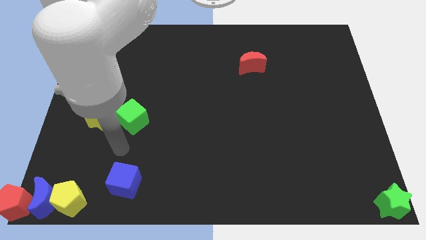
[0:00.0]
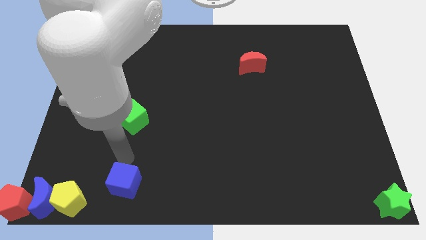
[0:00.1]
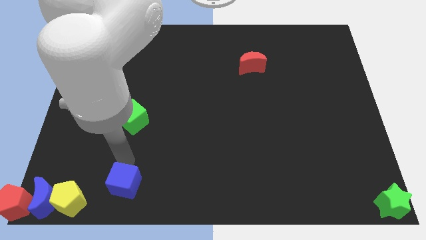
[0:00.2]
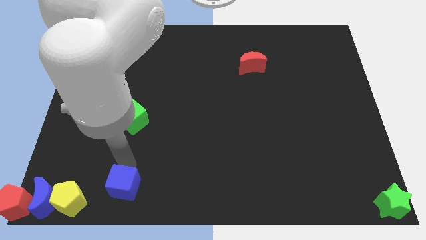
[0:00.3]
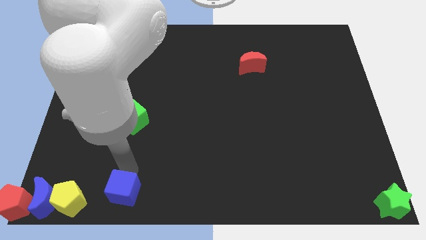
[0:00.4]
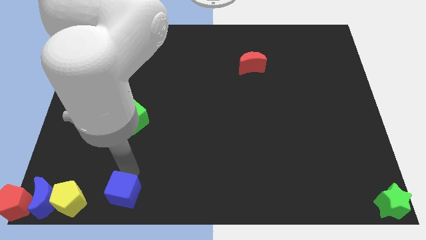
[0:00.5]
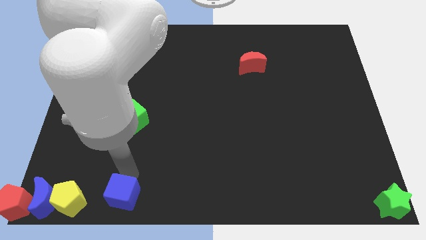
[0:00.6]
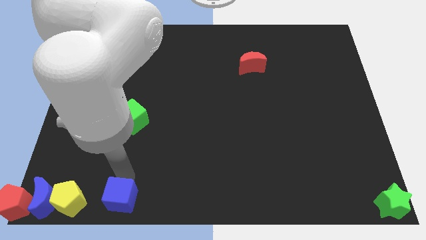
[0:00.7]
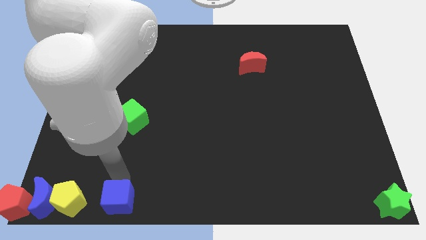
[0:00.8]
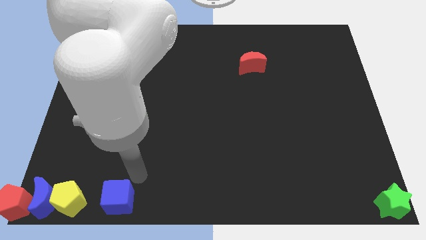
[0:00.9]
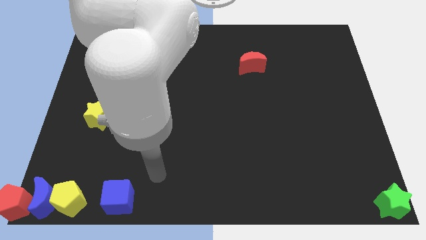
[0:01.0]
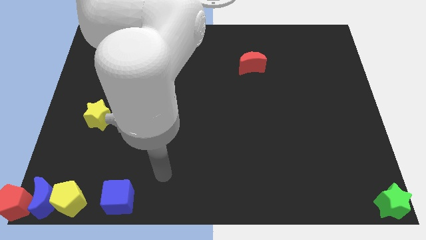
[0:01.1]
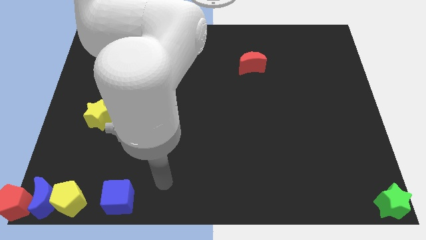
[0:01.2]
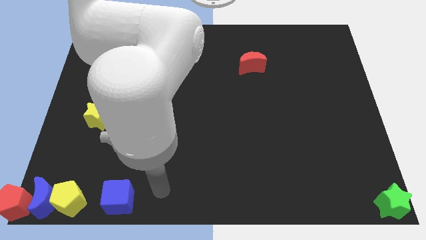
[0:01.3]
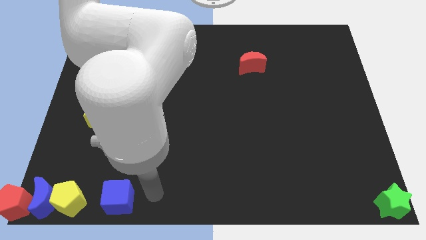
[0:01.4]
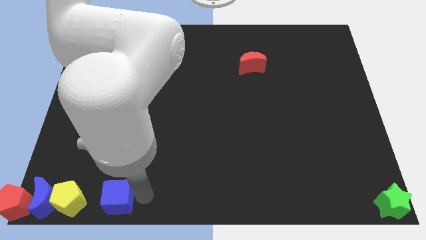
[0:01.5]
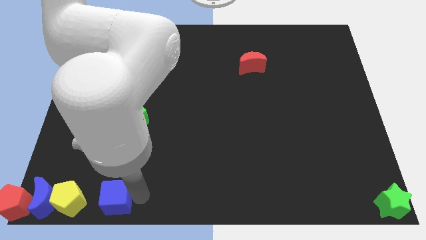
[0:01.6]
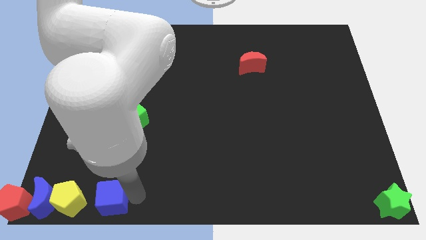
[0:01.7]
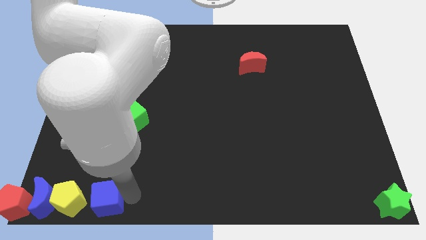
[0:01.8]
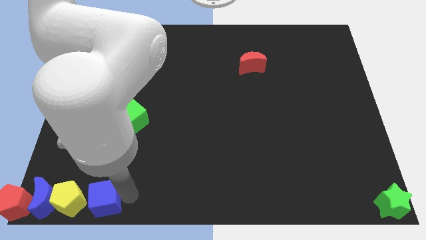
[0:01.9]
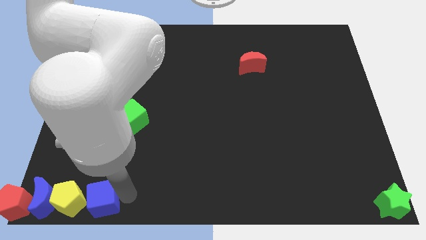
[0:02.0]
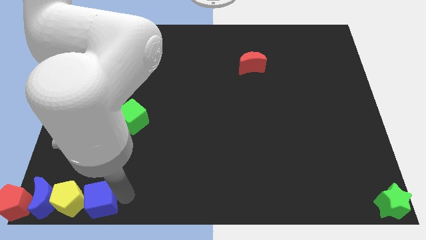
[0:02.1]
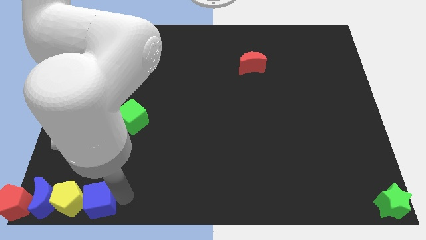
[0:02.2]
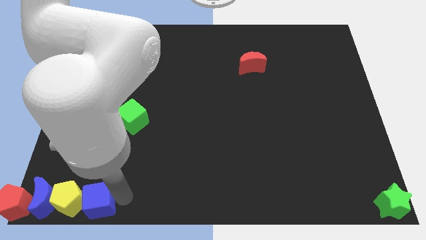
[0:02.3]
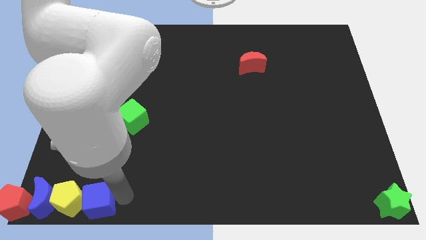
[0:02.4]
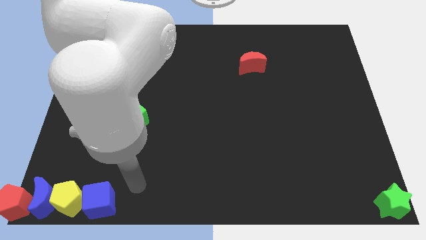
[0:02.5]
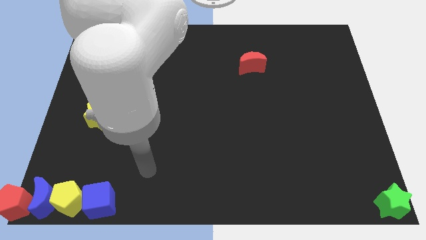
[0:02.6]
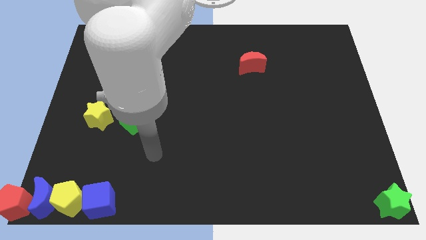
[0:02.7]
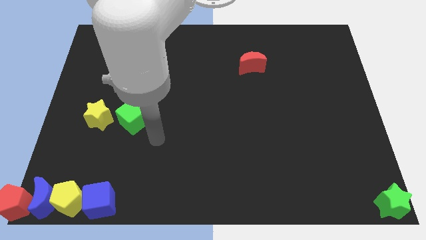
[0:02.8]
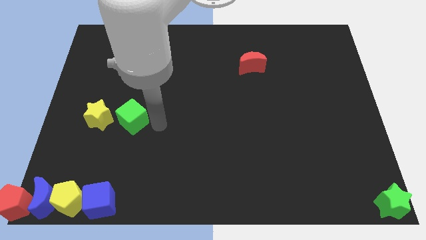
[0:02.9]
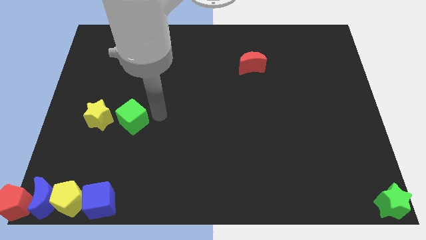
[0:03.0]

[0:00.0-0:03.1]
move blue cube into the group of blocks

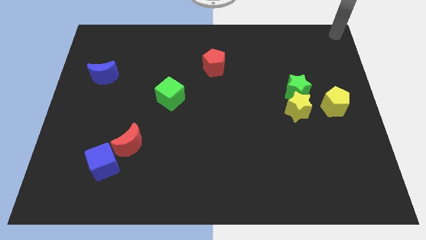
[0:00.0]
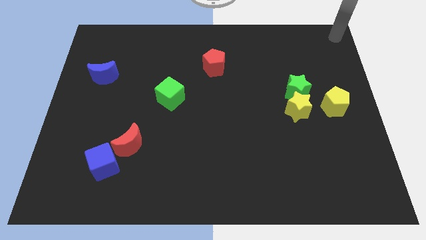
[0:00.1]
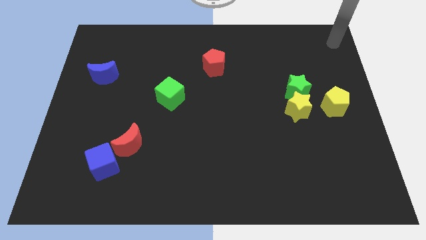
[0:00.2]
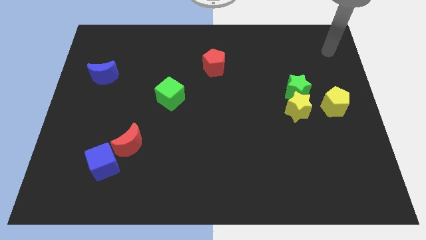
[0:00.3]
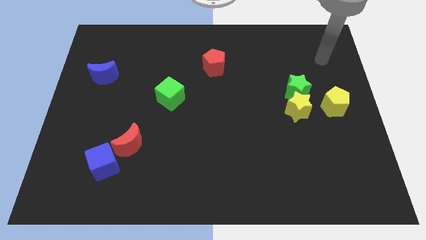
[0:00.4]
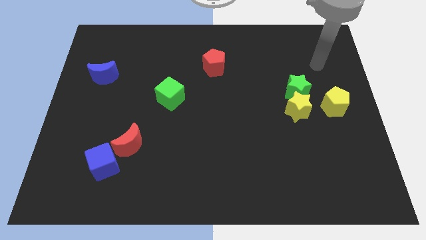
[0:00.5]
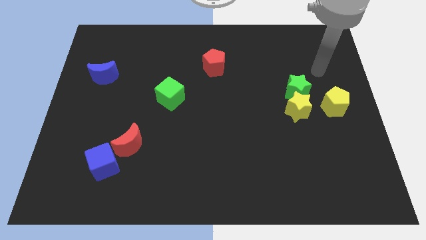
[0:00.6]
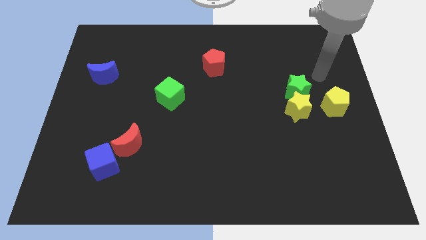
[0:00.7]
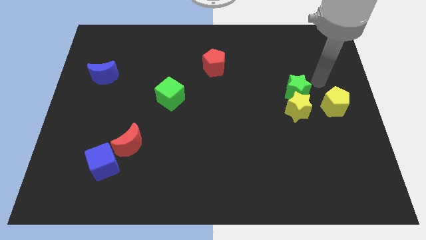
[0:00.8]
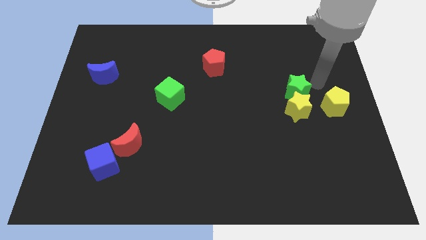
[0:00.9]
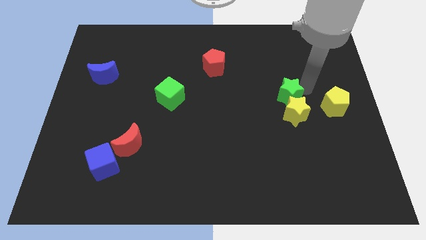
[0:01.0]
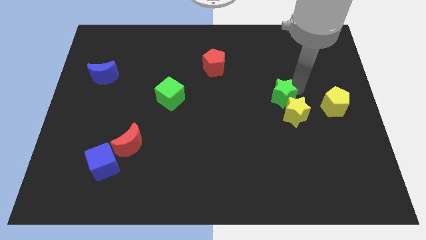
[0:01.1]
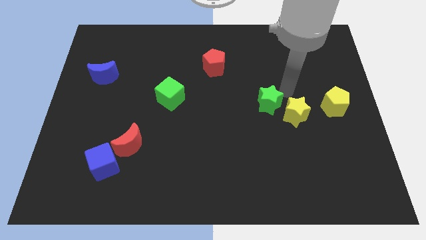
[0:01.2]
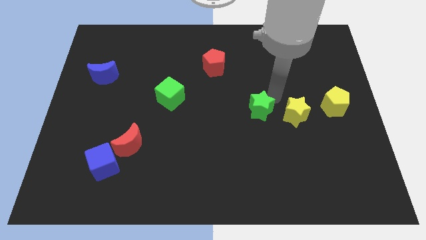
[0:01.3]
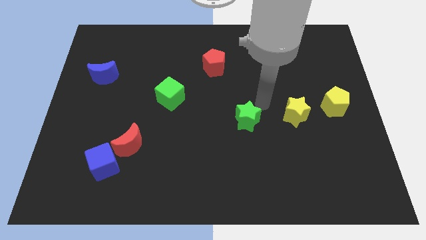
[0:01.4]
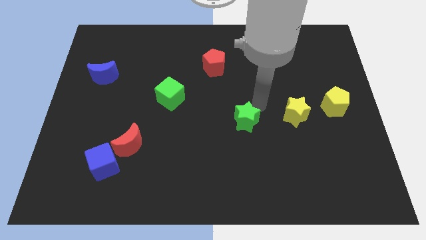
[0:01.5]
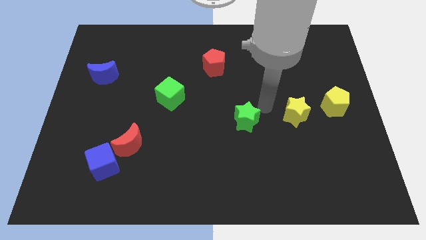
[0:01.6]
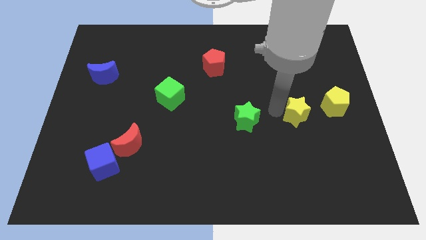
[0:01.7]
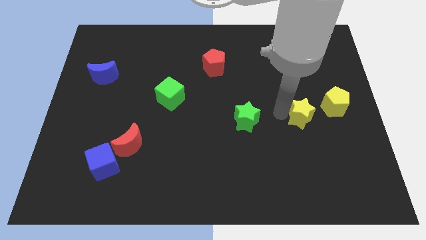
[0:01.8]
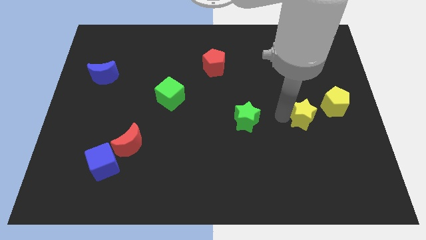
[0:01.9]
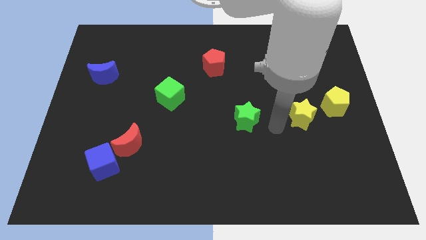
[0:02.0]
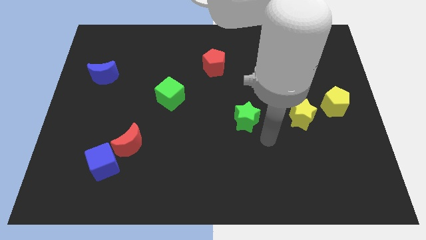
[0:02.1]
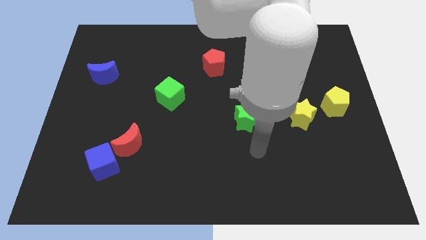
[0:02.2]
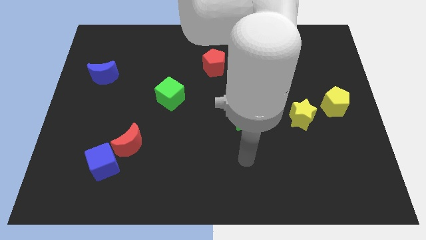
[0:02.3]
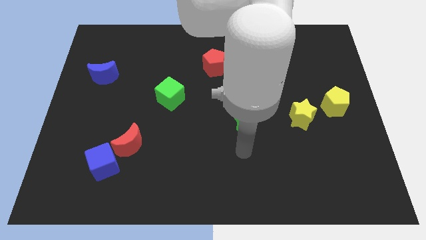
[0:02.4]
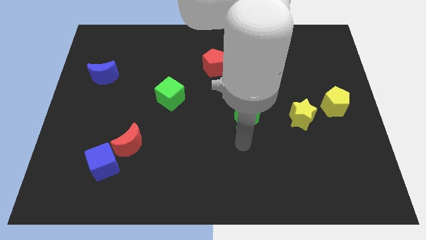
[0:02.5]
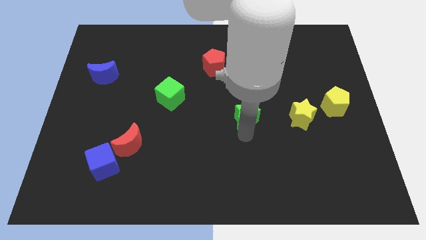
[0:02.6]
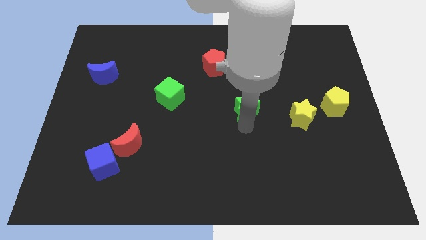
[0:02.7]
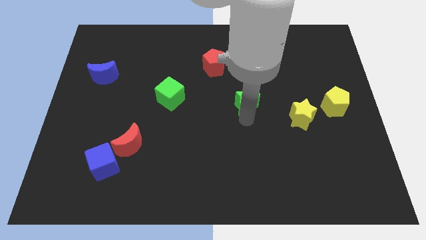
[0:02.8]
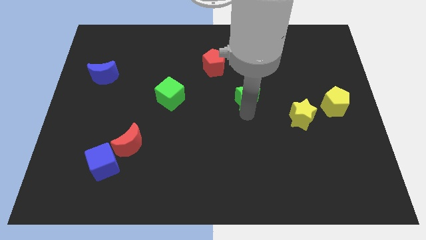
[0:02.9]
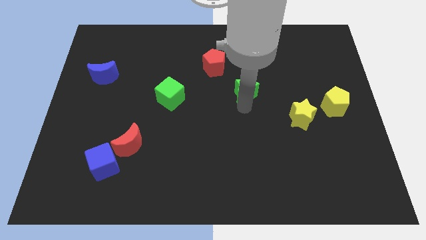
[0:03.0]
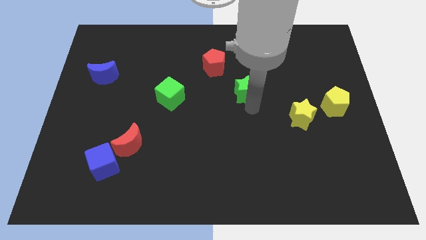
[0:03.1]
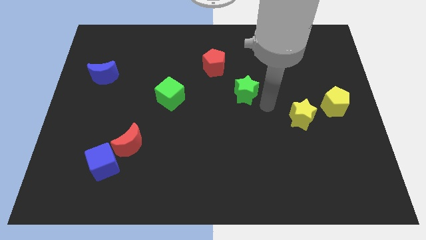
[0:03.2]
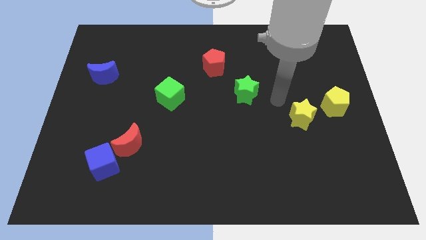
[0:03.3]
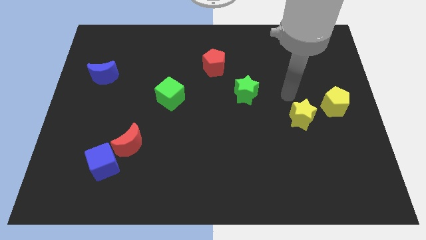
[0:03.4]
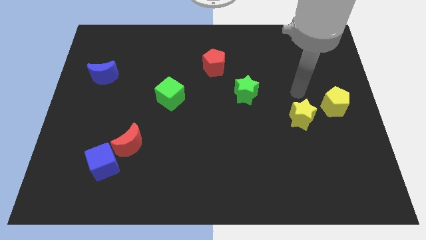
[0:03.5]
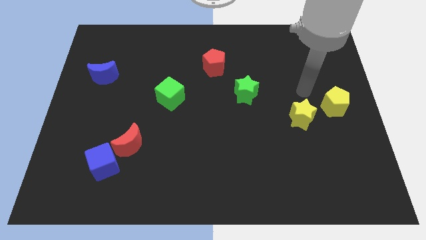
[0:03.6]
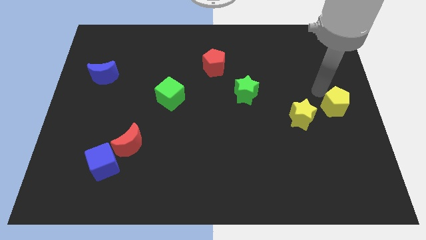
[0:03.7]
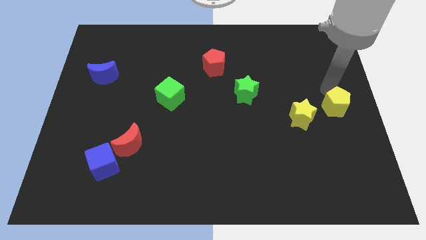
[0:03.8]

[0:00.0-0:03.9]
push the green star towards the center of the board

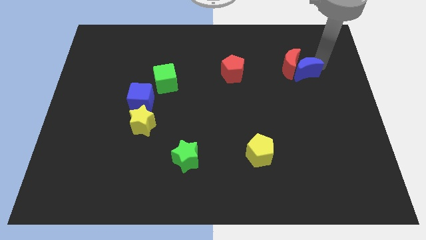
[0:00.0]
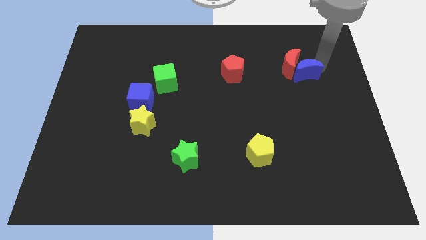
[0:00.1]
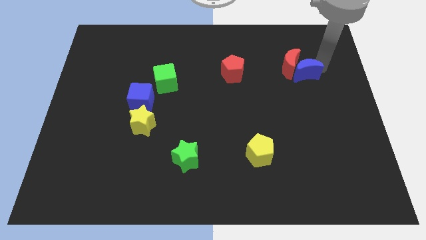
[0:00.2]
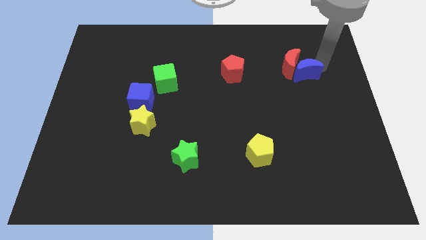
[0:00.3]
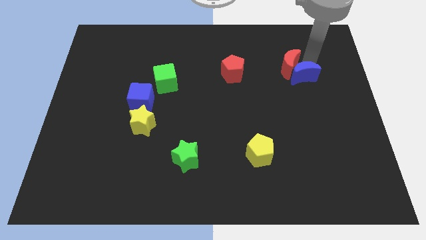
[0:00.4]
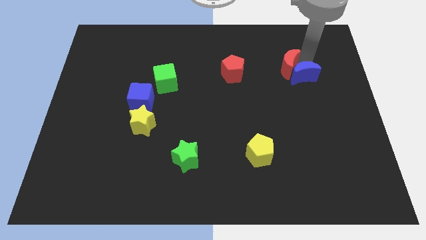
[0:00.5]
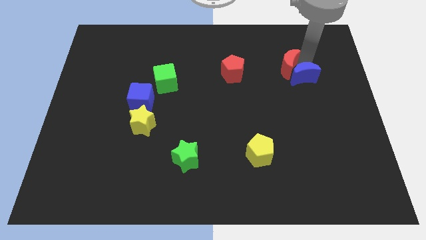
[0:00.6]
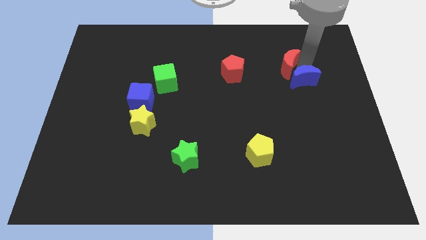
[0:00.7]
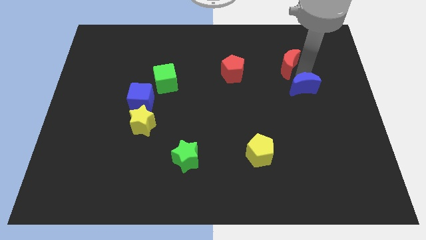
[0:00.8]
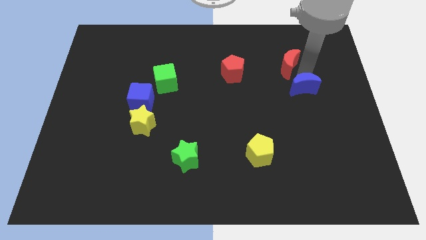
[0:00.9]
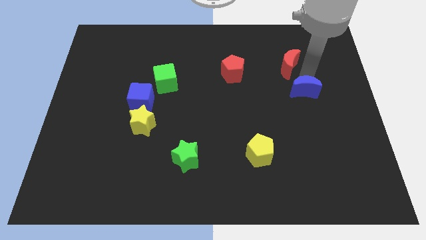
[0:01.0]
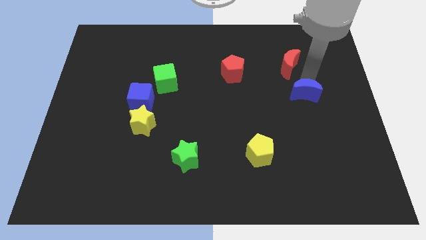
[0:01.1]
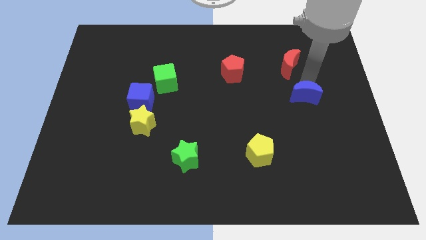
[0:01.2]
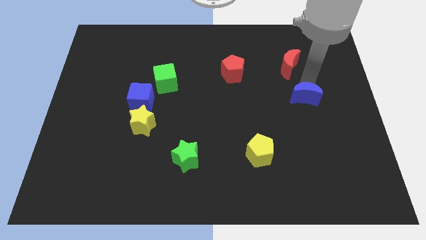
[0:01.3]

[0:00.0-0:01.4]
separate blue moon from red moon

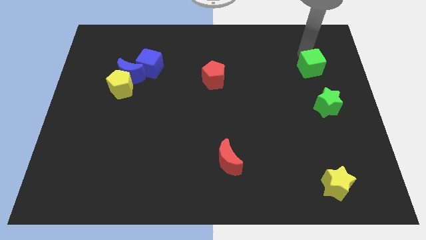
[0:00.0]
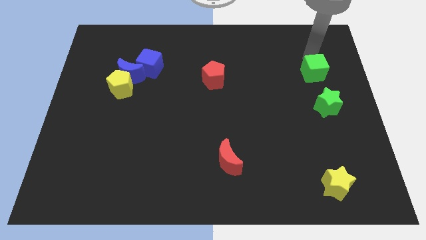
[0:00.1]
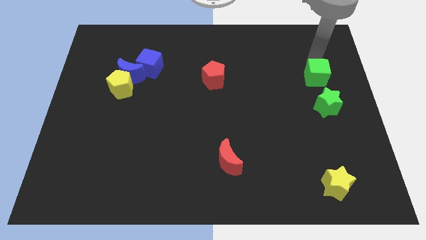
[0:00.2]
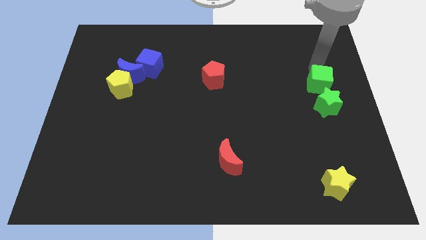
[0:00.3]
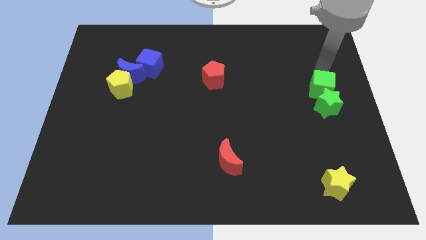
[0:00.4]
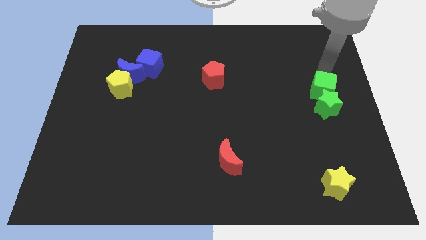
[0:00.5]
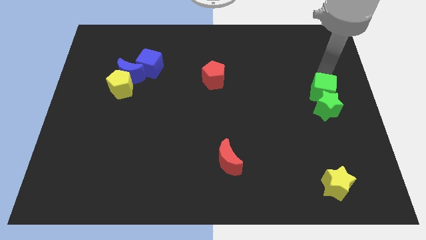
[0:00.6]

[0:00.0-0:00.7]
push the green cube into the green star from the top
